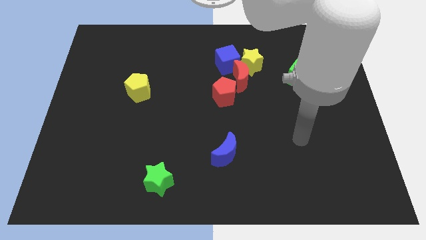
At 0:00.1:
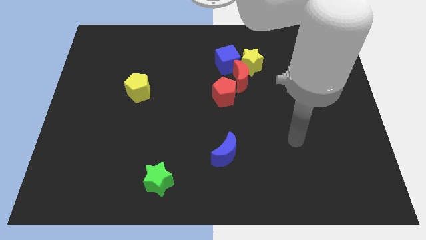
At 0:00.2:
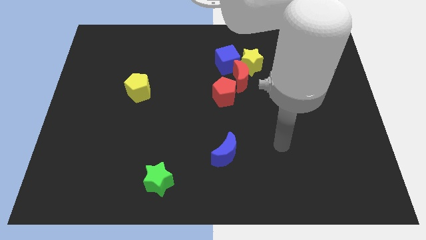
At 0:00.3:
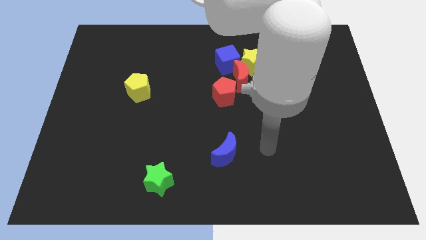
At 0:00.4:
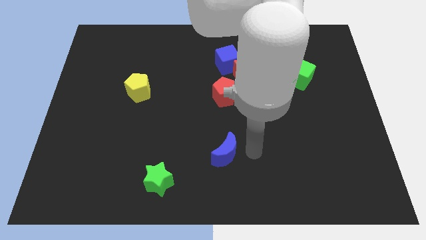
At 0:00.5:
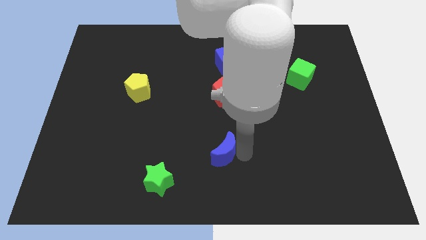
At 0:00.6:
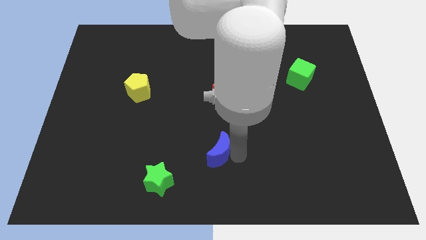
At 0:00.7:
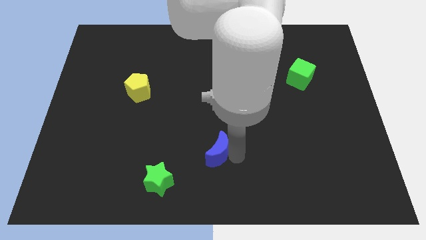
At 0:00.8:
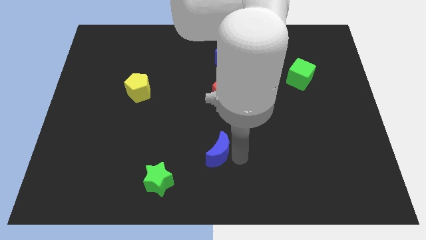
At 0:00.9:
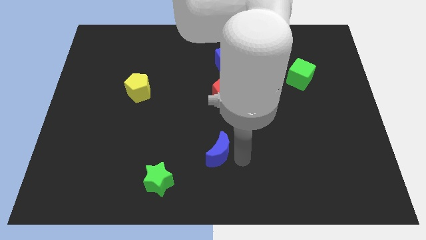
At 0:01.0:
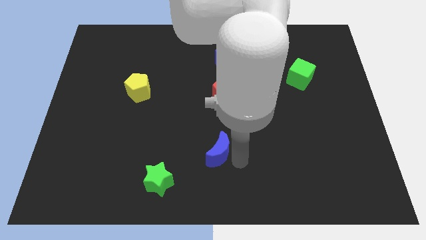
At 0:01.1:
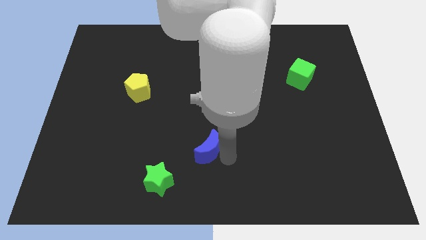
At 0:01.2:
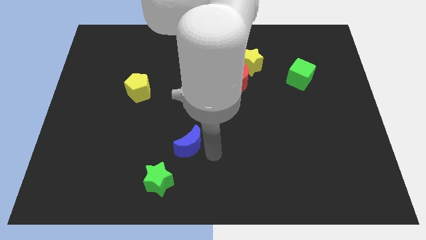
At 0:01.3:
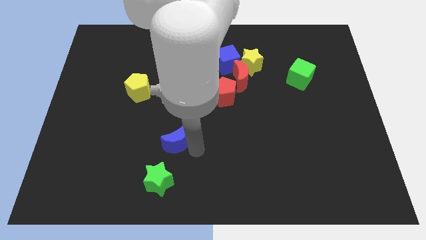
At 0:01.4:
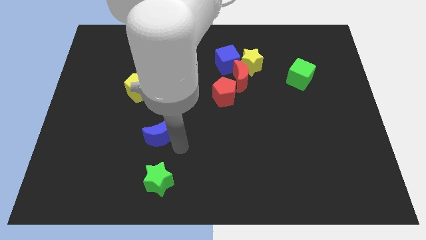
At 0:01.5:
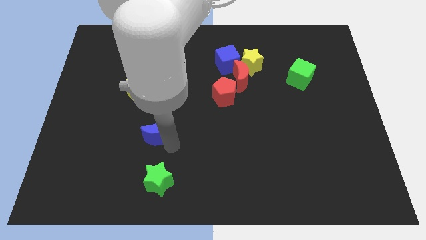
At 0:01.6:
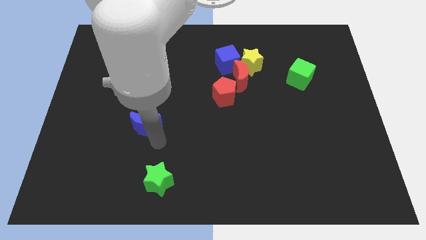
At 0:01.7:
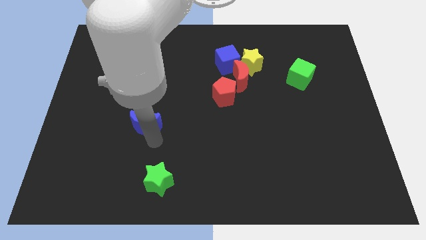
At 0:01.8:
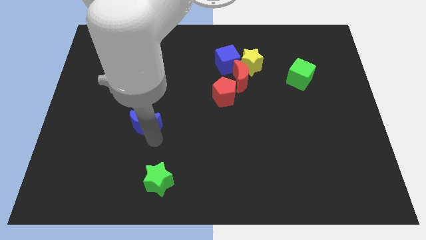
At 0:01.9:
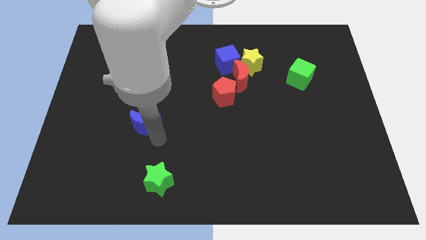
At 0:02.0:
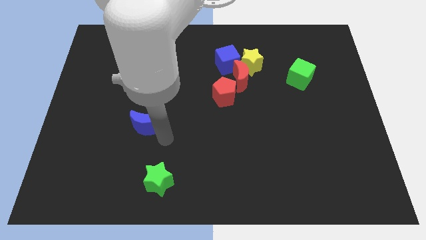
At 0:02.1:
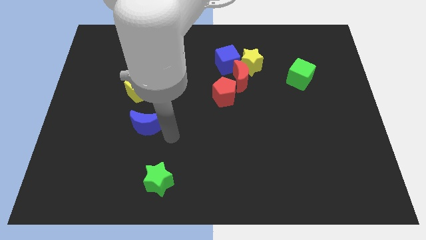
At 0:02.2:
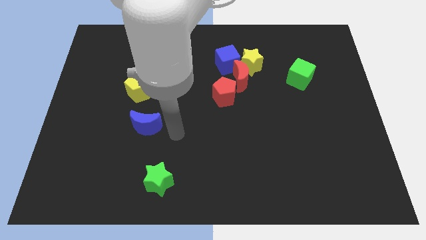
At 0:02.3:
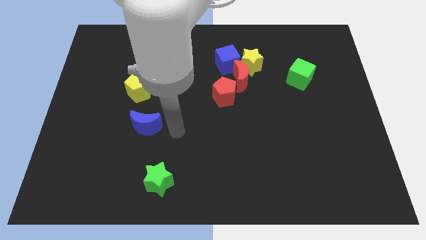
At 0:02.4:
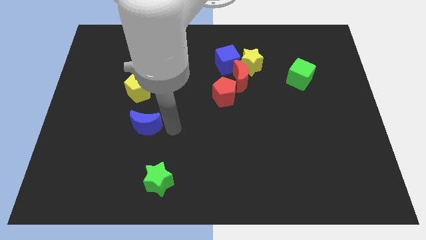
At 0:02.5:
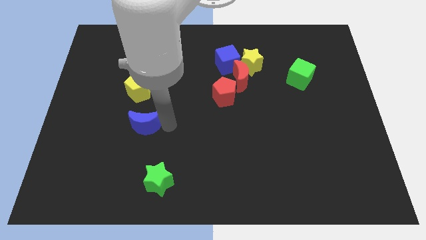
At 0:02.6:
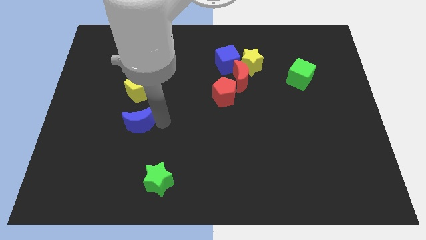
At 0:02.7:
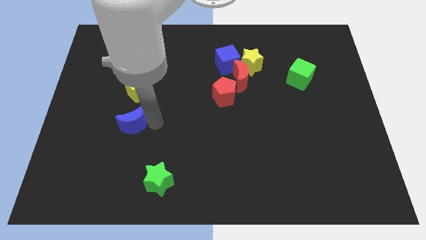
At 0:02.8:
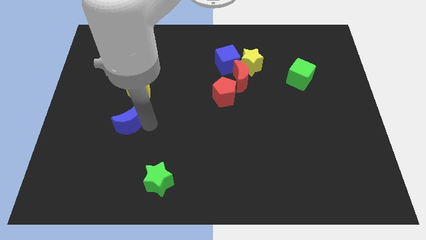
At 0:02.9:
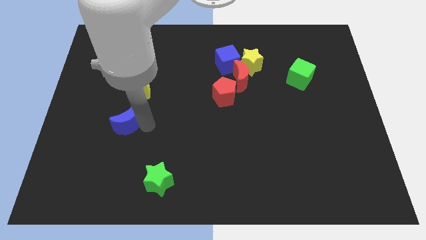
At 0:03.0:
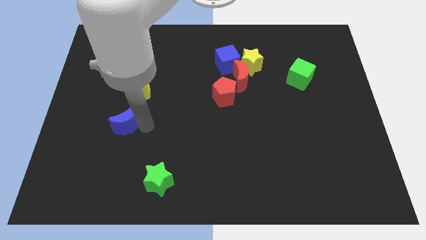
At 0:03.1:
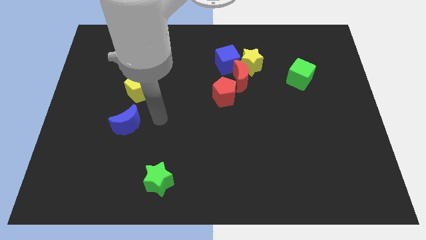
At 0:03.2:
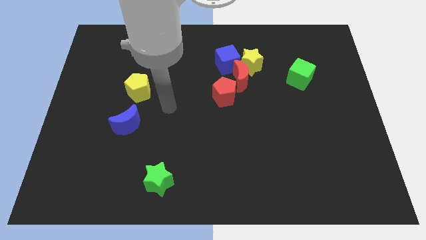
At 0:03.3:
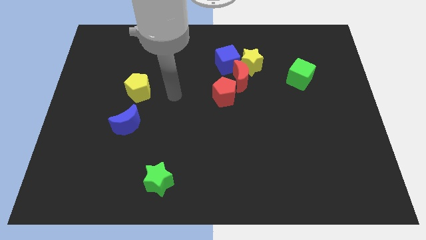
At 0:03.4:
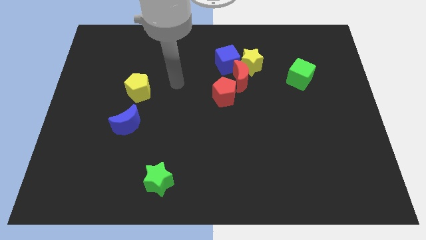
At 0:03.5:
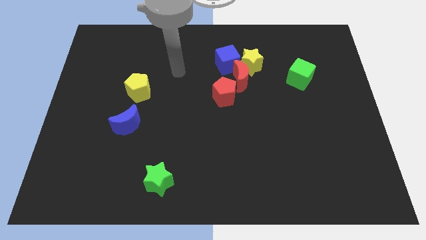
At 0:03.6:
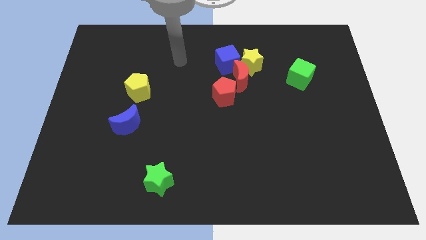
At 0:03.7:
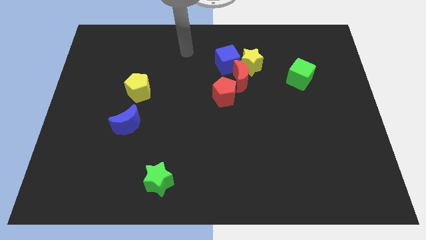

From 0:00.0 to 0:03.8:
push the blue moon diagonally top left to the green star

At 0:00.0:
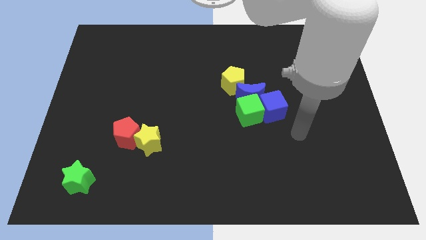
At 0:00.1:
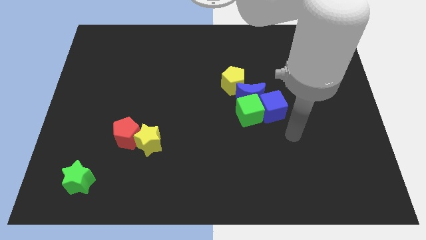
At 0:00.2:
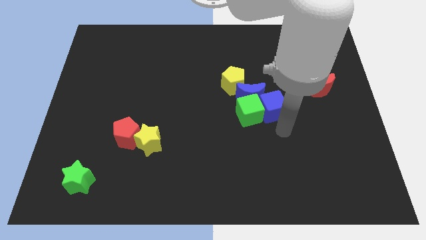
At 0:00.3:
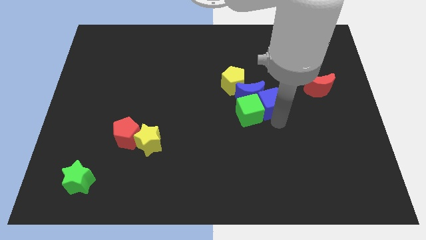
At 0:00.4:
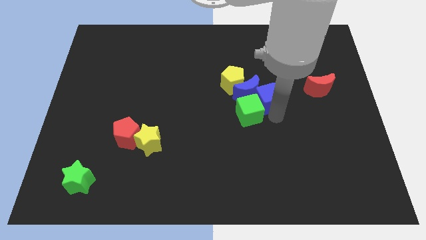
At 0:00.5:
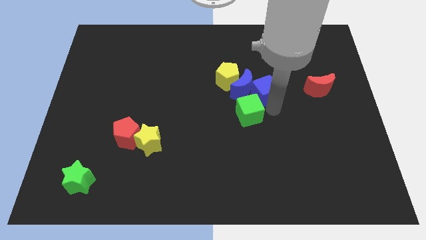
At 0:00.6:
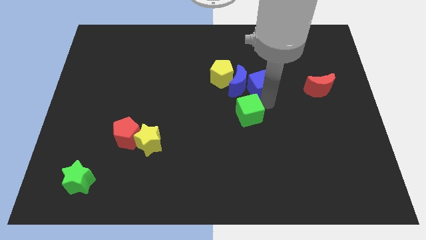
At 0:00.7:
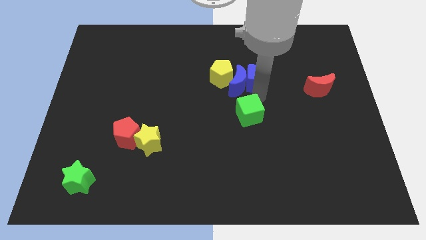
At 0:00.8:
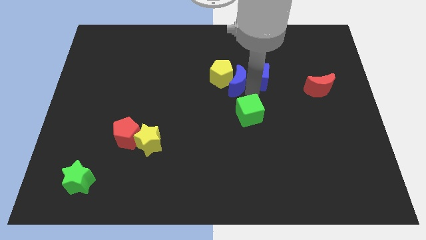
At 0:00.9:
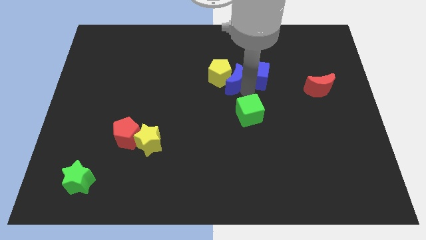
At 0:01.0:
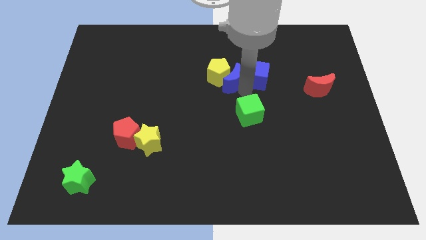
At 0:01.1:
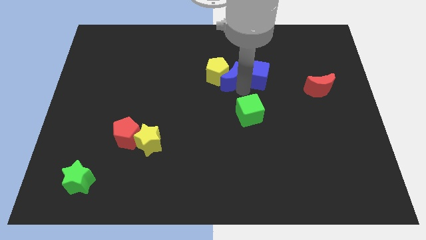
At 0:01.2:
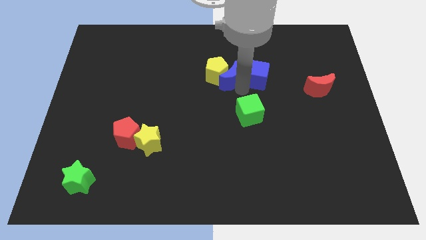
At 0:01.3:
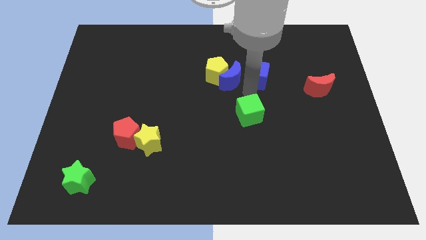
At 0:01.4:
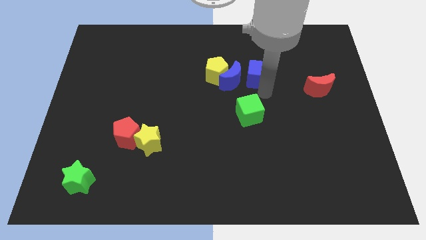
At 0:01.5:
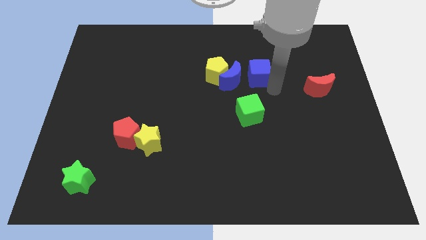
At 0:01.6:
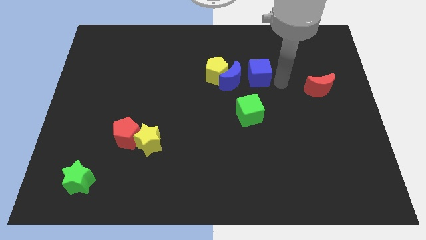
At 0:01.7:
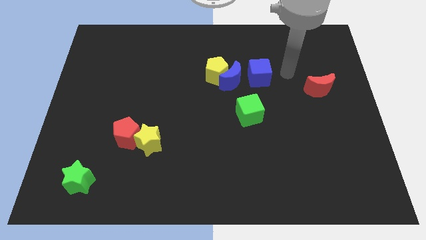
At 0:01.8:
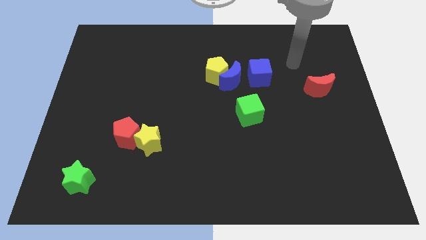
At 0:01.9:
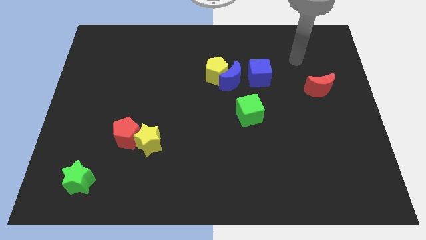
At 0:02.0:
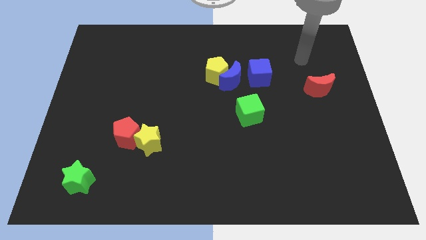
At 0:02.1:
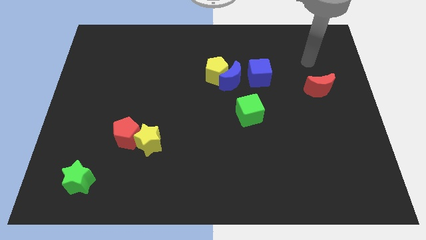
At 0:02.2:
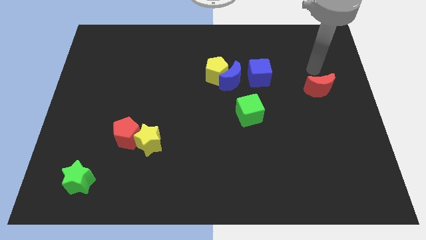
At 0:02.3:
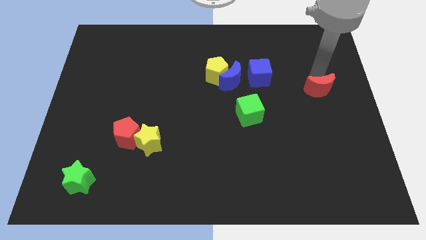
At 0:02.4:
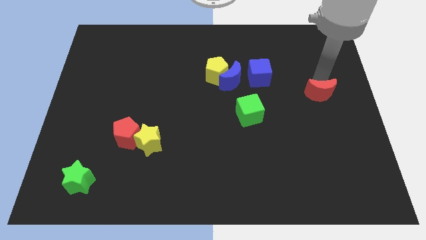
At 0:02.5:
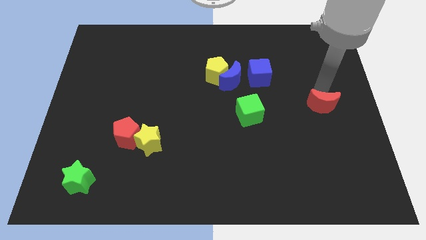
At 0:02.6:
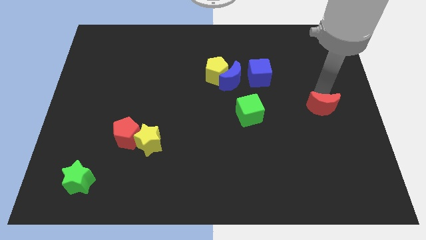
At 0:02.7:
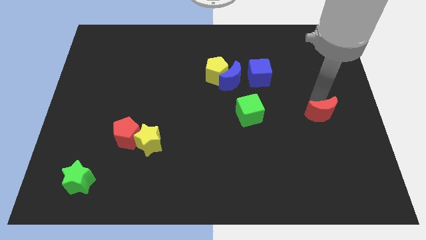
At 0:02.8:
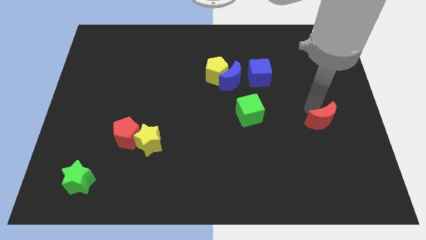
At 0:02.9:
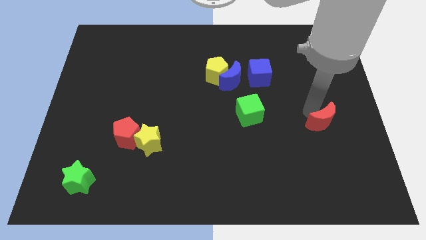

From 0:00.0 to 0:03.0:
move red crescent towards down

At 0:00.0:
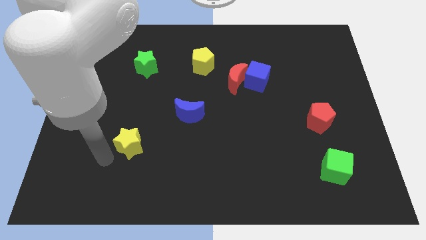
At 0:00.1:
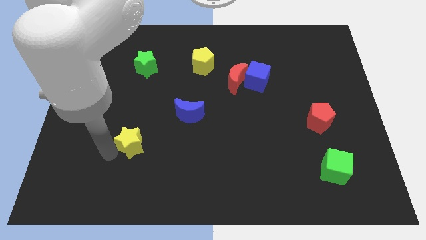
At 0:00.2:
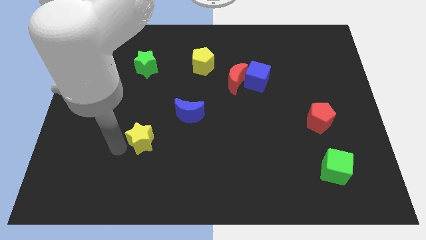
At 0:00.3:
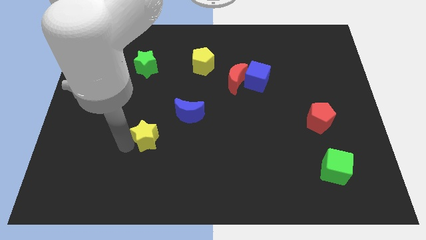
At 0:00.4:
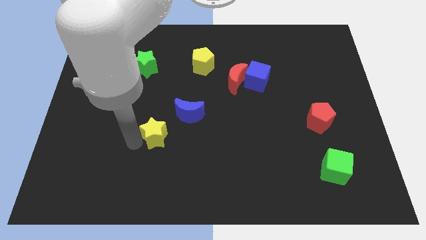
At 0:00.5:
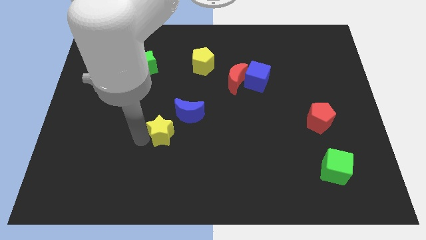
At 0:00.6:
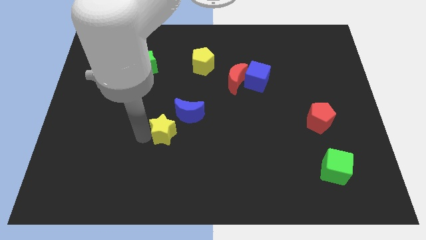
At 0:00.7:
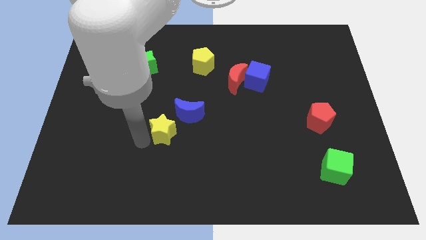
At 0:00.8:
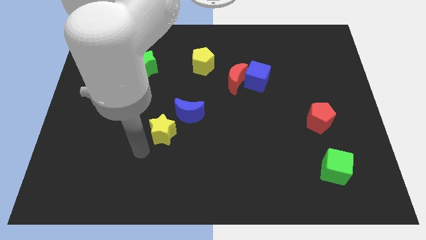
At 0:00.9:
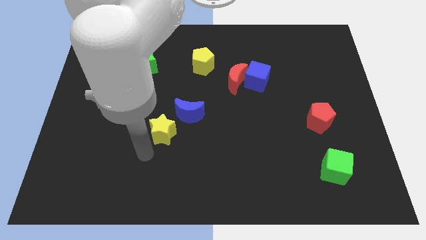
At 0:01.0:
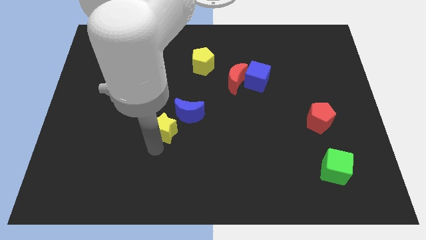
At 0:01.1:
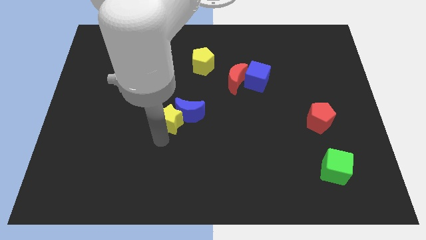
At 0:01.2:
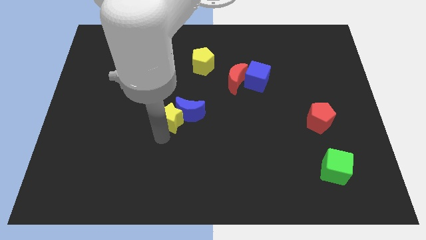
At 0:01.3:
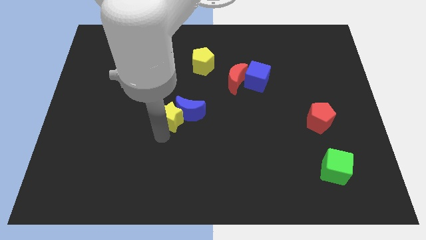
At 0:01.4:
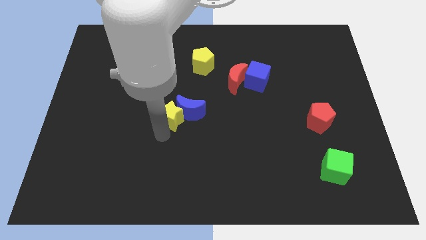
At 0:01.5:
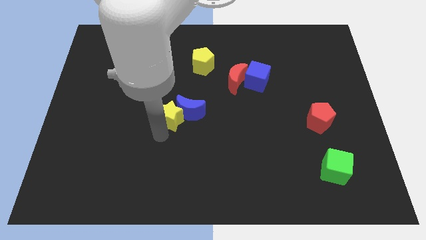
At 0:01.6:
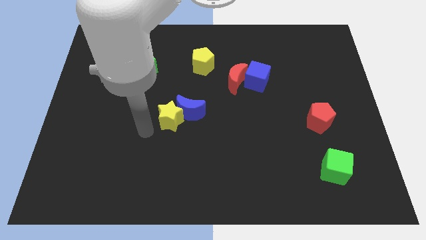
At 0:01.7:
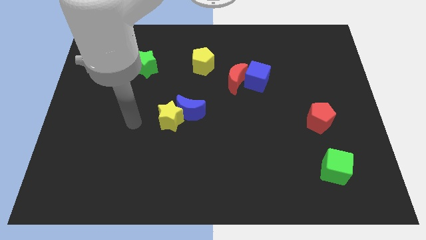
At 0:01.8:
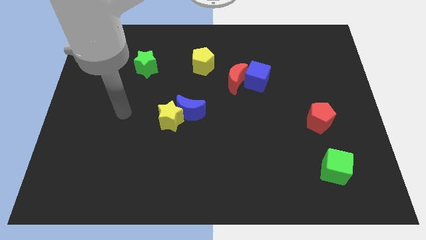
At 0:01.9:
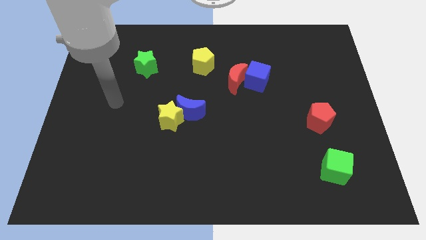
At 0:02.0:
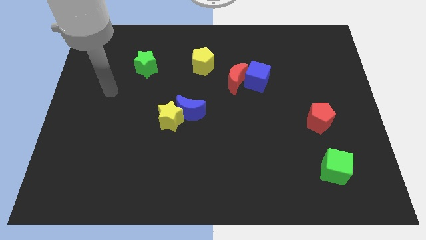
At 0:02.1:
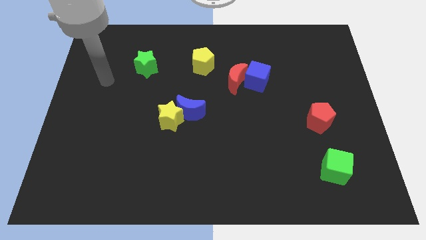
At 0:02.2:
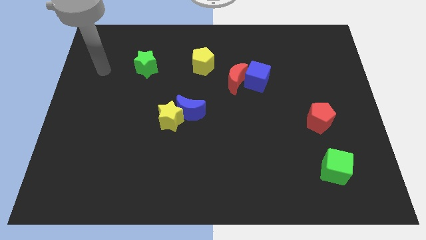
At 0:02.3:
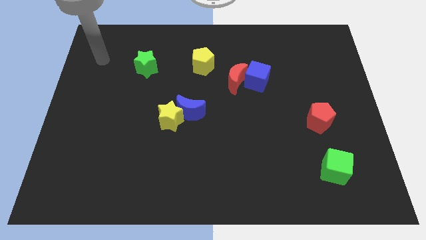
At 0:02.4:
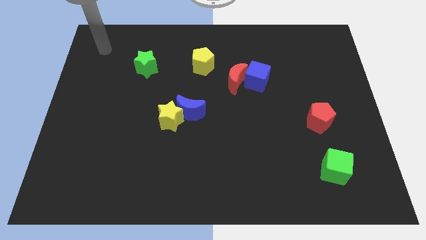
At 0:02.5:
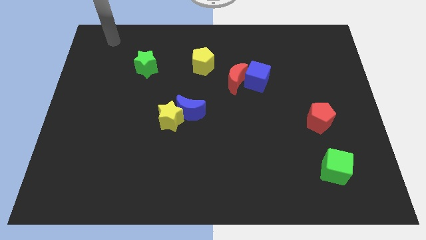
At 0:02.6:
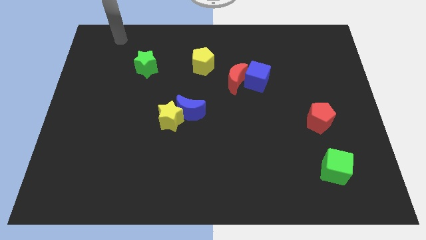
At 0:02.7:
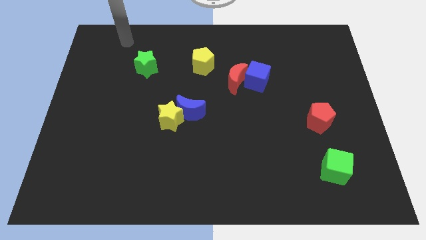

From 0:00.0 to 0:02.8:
move the yellow star to the bottom side of the blue moon
